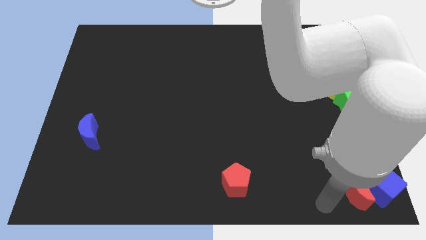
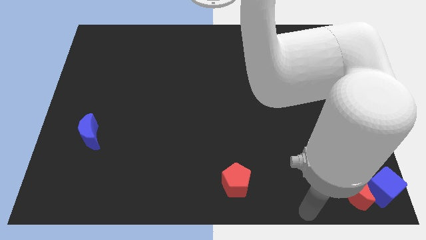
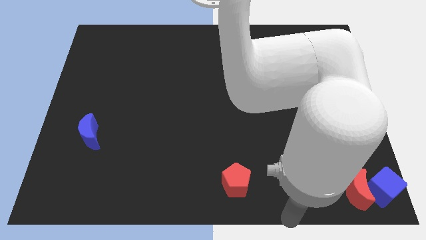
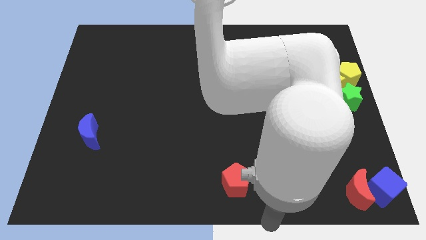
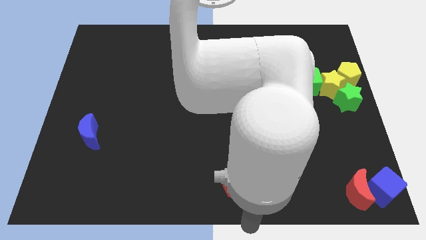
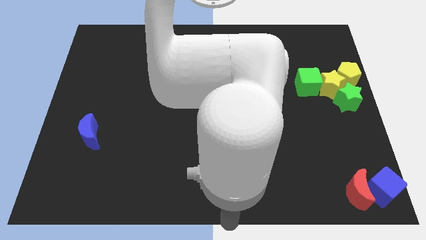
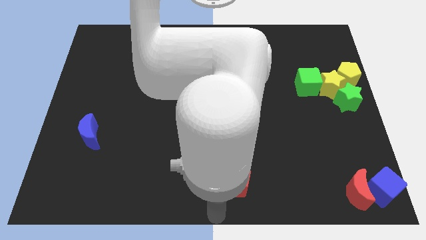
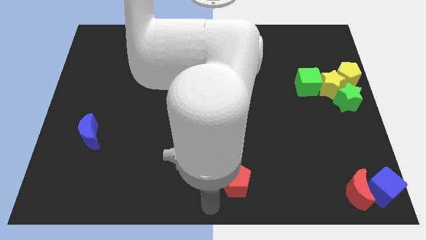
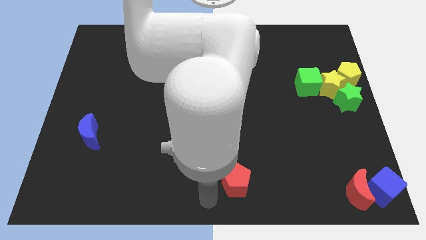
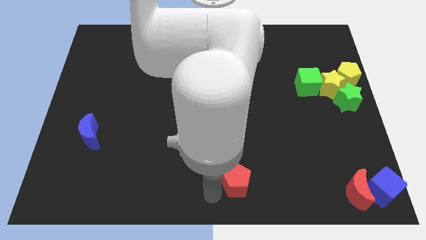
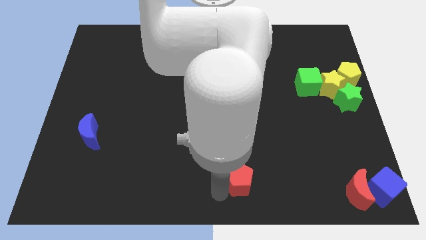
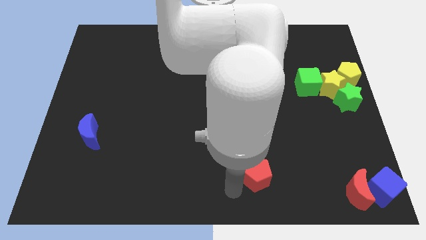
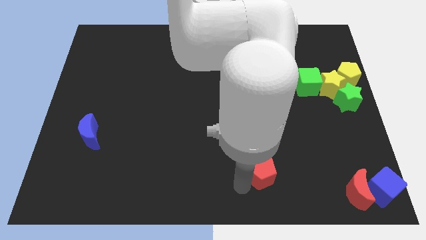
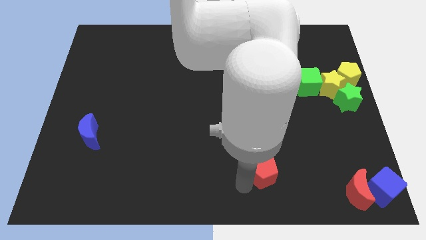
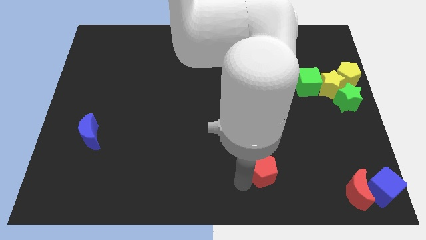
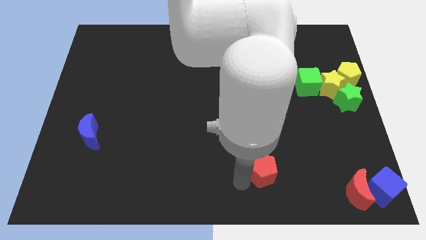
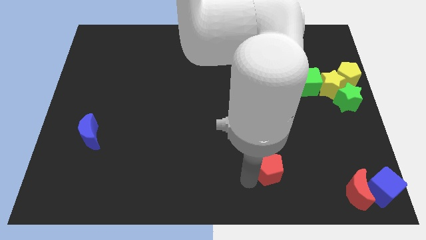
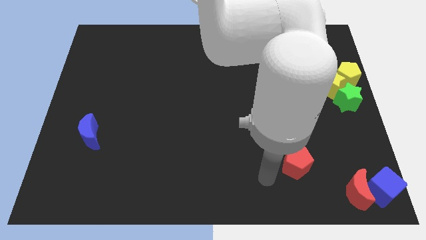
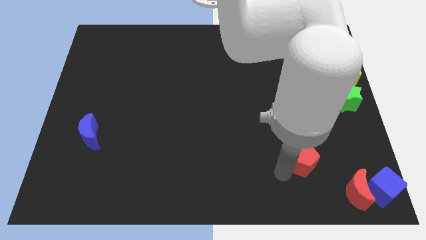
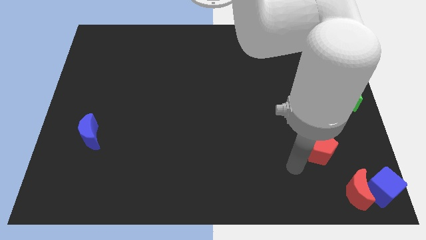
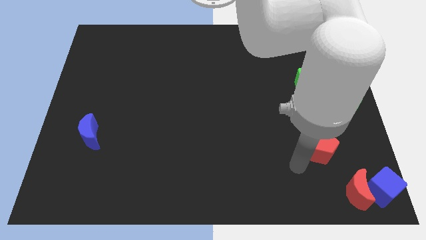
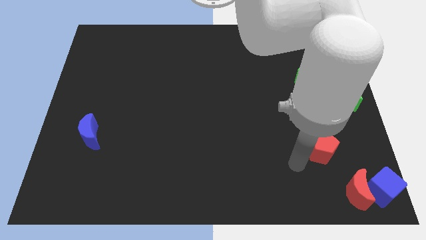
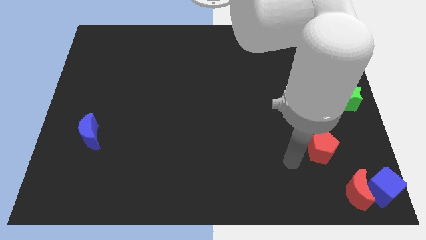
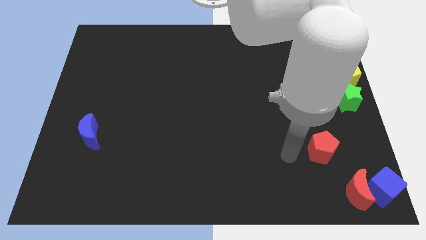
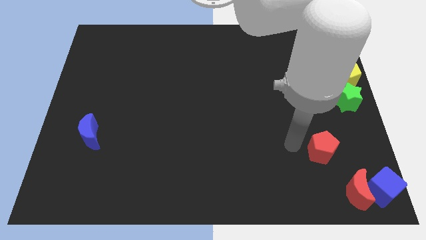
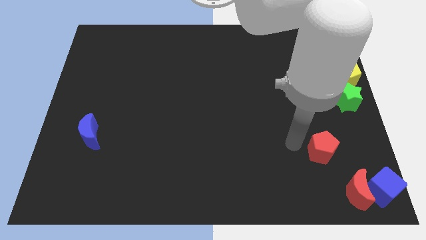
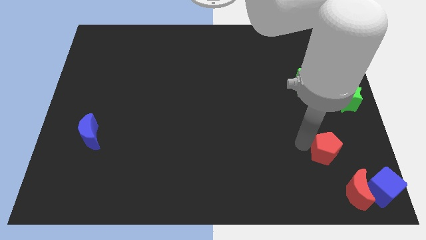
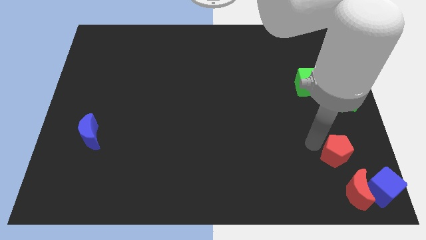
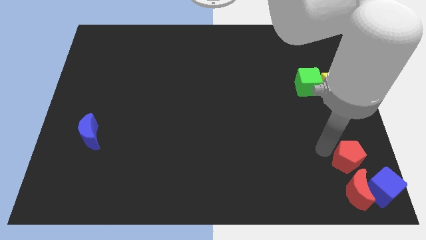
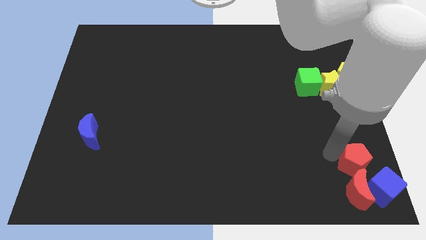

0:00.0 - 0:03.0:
place the red pentagon to the top of red moon

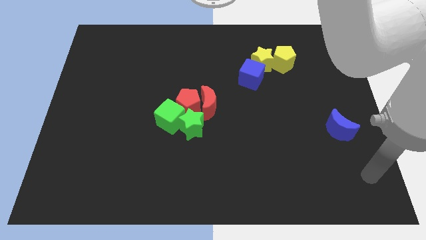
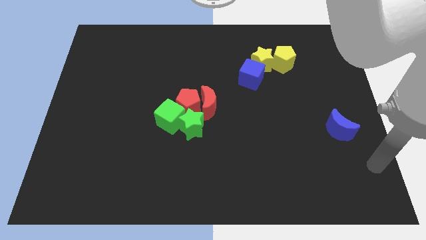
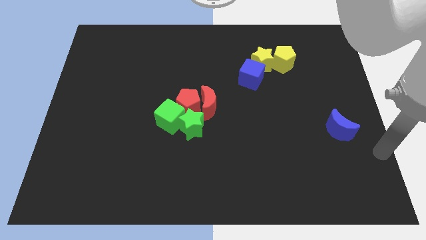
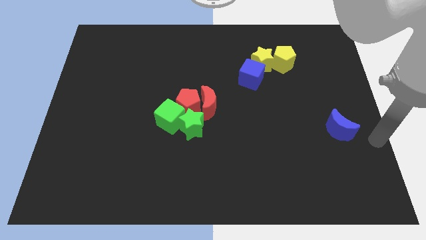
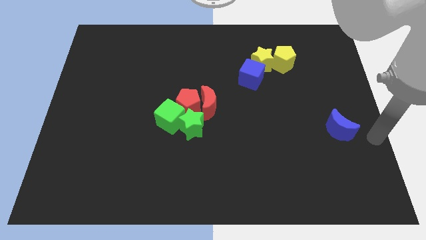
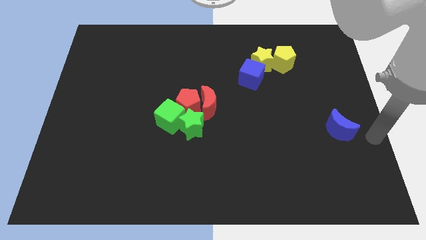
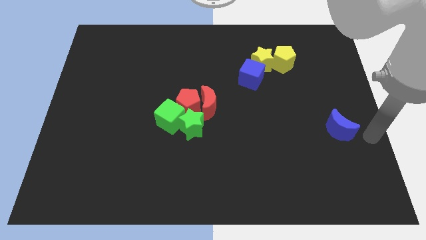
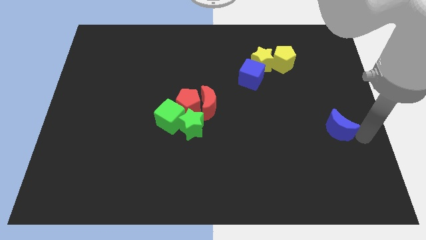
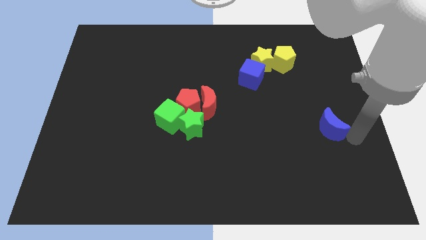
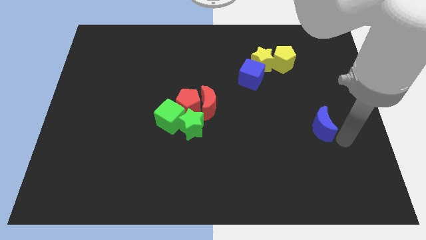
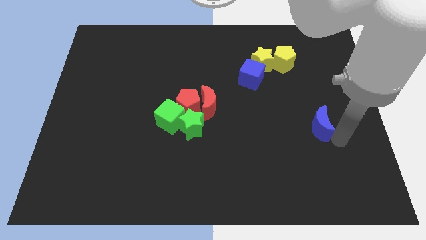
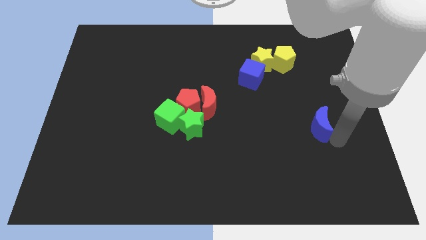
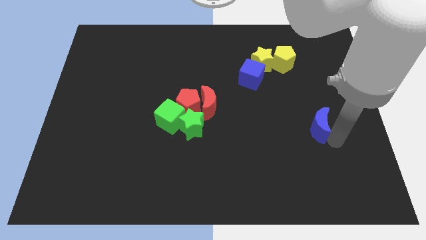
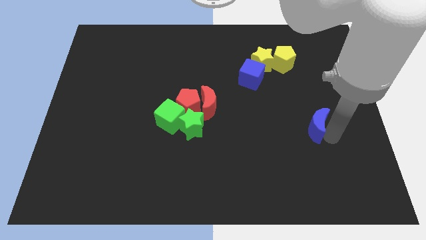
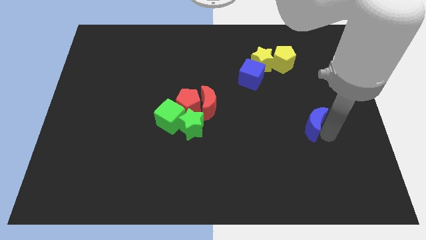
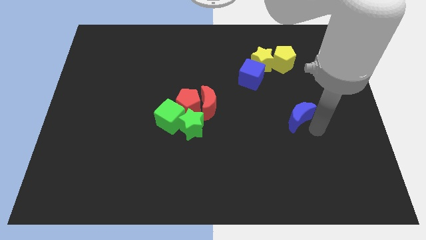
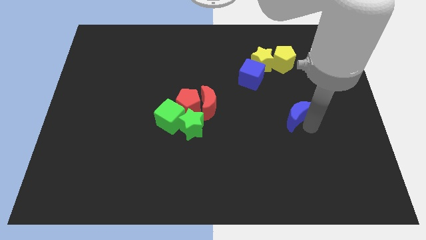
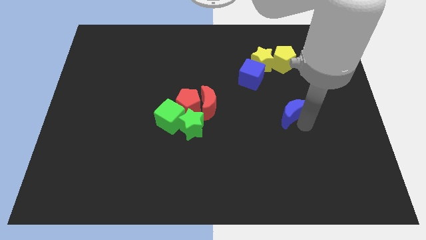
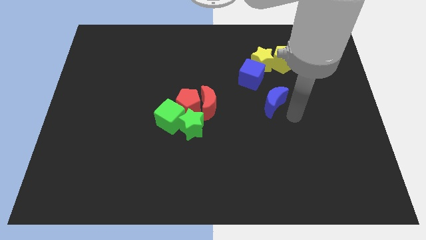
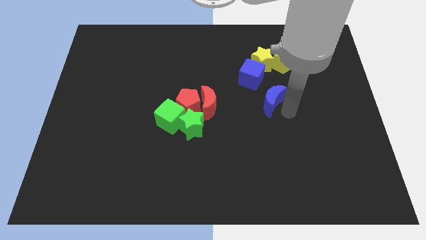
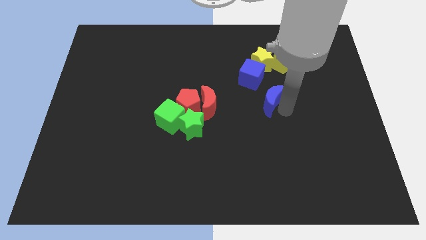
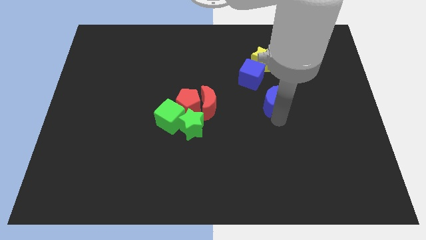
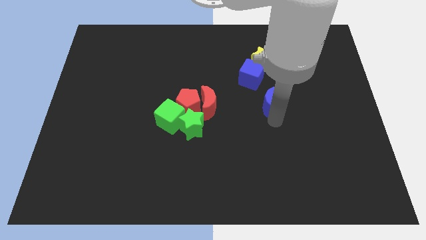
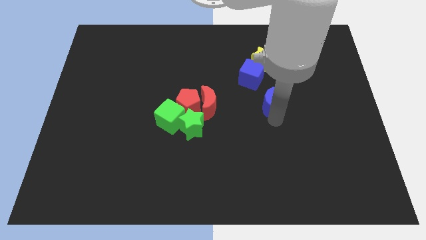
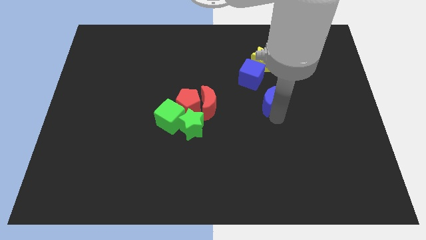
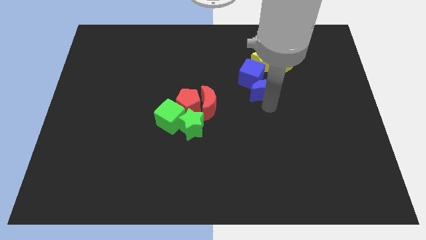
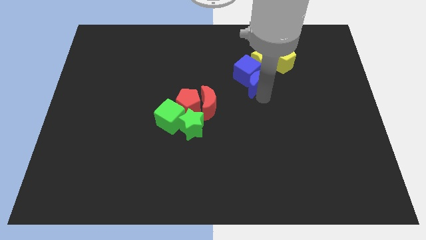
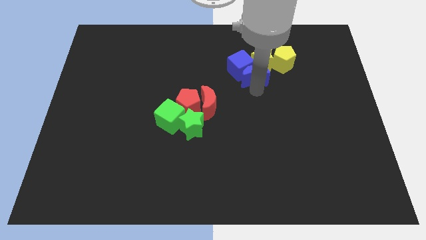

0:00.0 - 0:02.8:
push the blue moon into blue cube

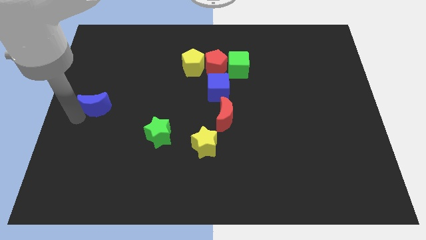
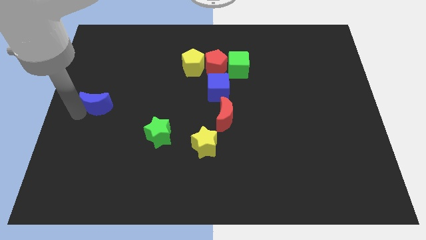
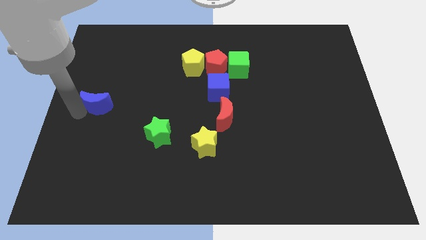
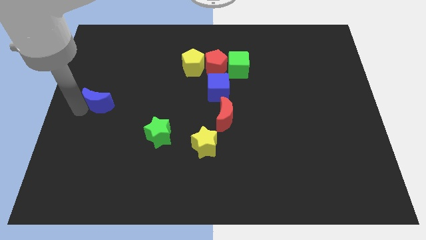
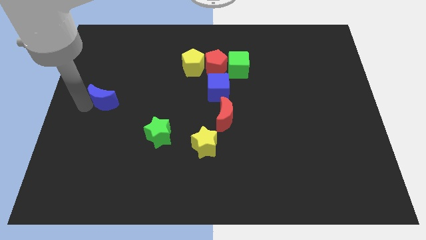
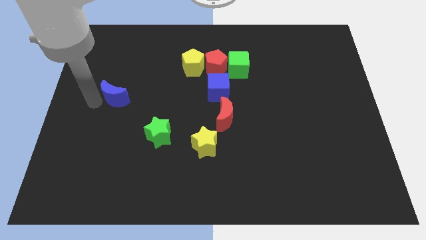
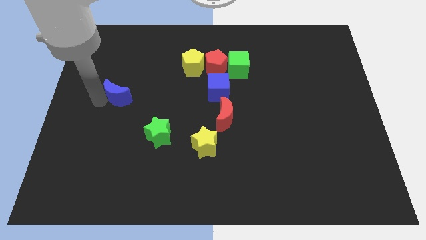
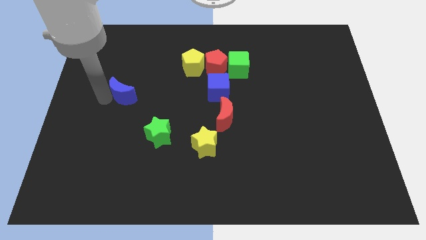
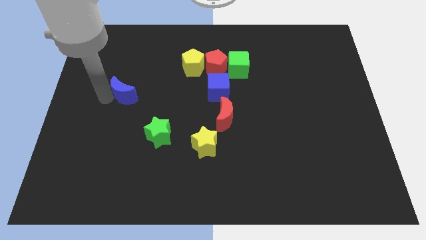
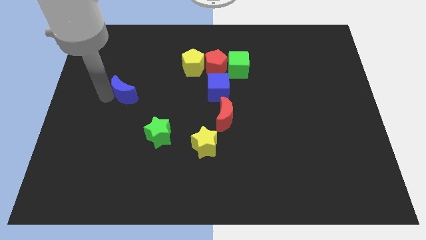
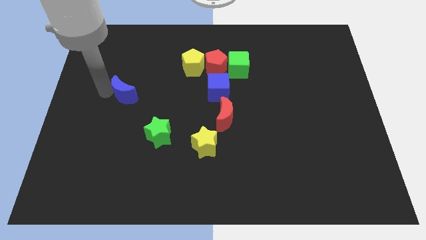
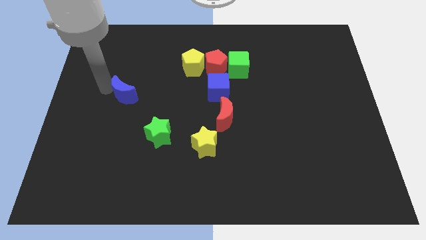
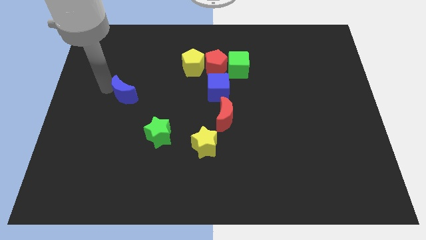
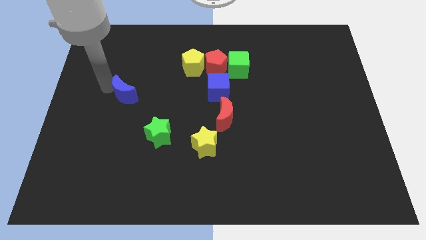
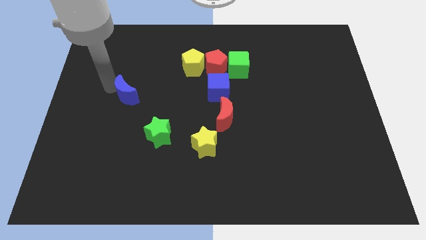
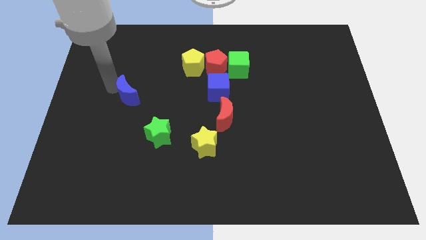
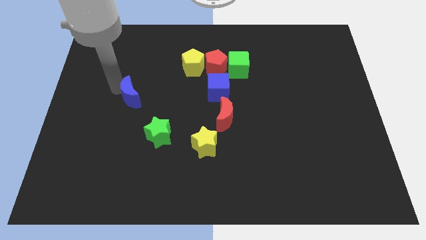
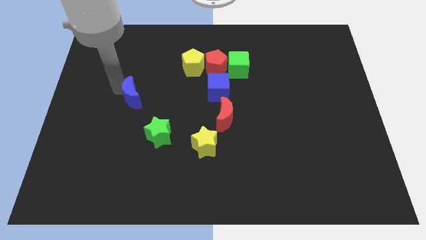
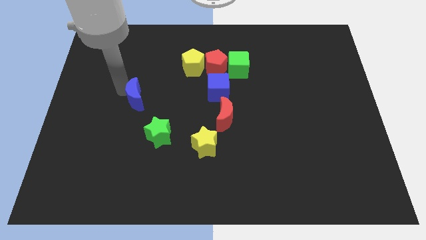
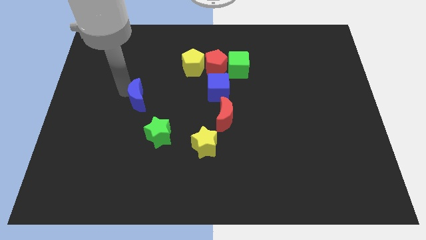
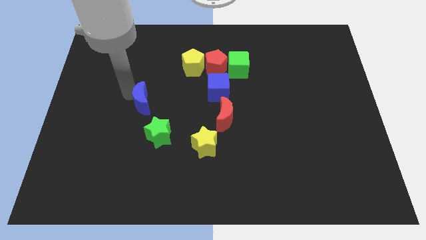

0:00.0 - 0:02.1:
drag the blue moon towards the green star

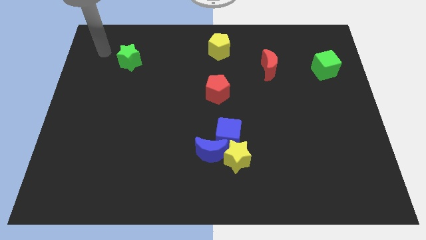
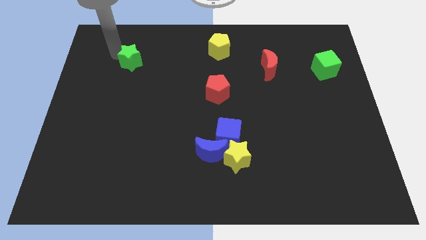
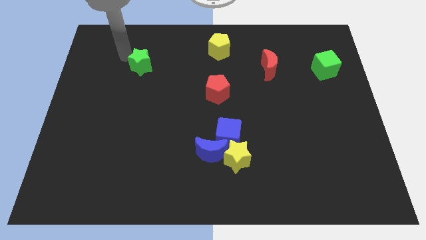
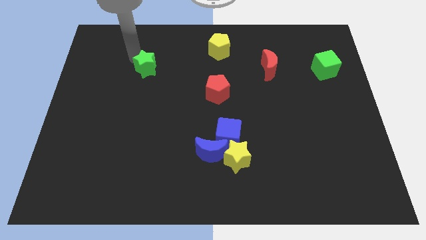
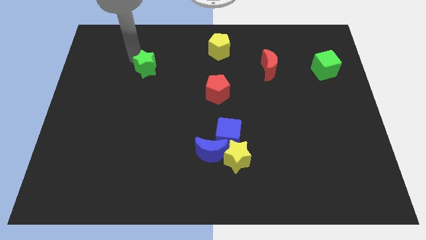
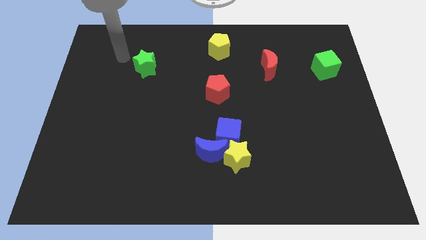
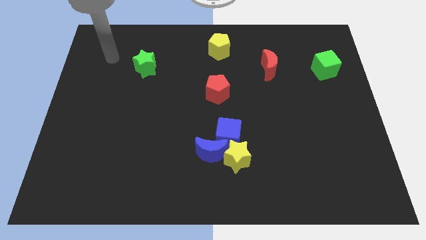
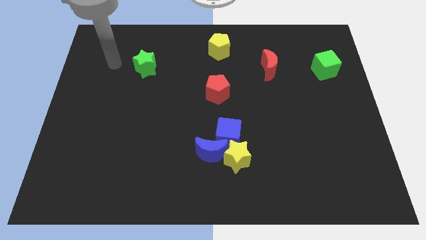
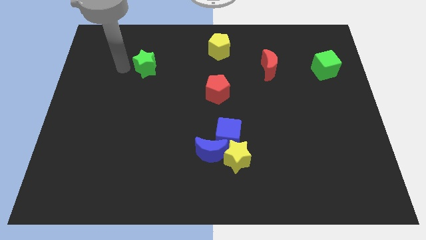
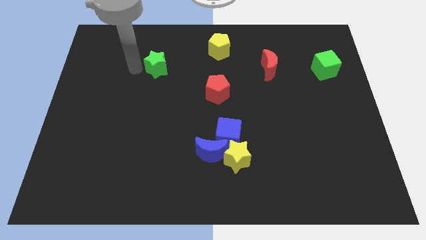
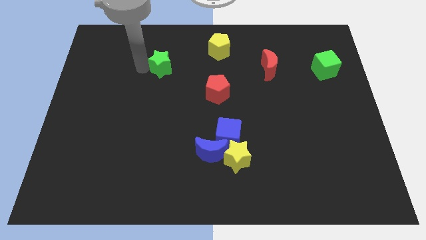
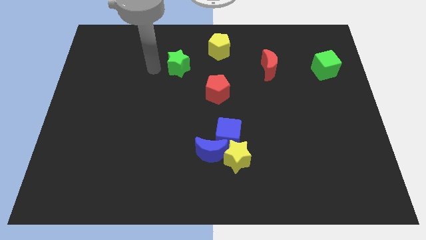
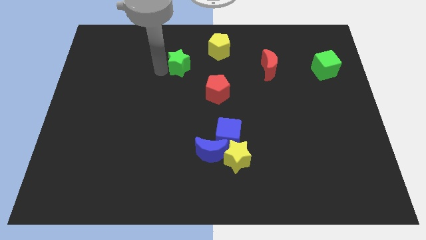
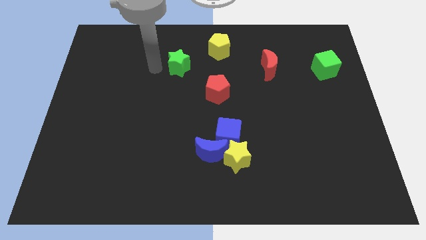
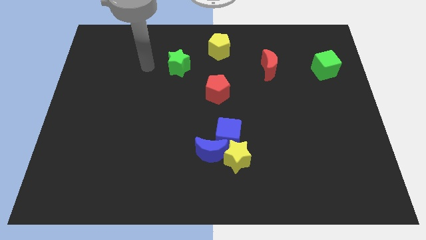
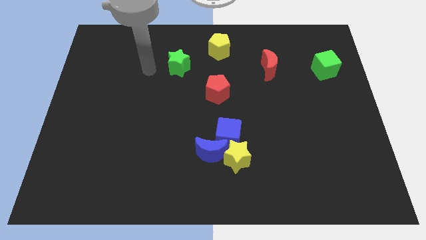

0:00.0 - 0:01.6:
push the green star to the bottom left of the yellow pentagon
